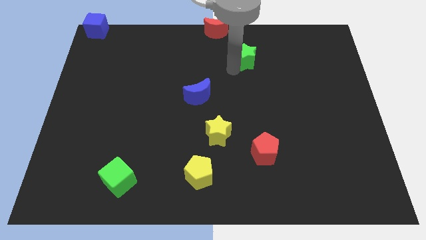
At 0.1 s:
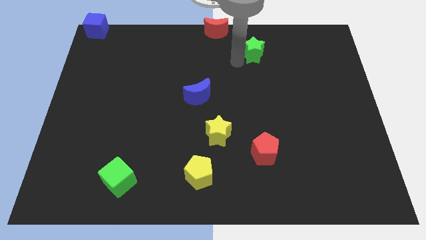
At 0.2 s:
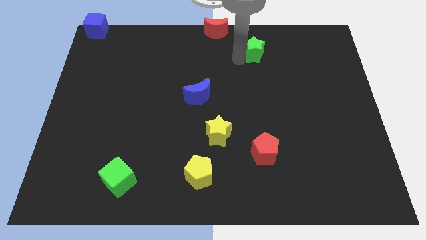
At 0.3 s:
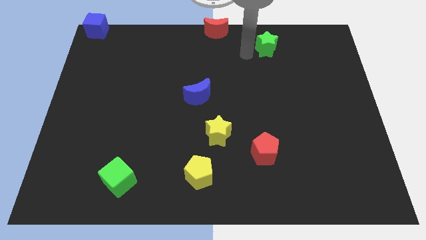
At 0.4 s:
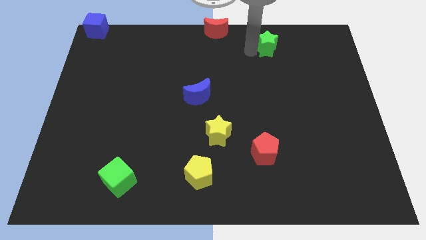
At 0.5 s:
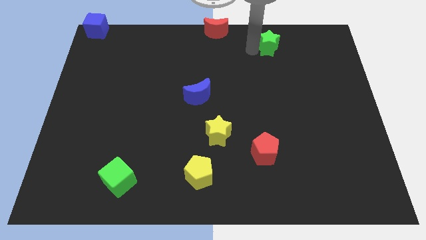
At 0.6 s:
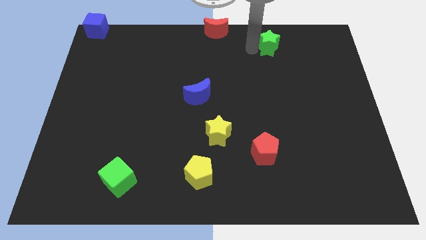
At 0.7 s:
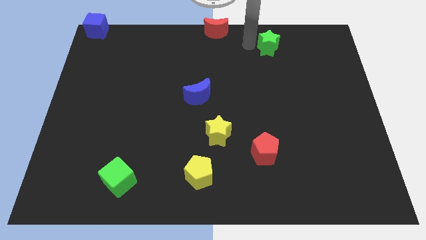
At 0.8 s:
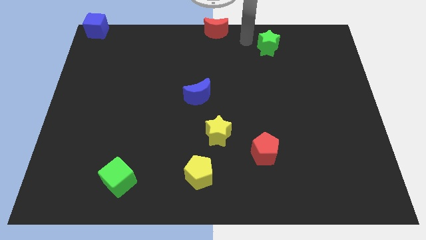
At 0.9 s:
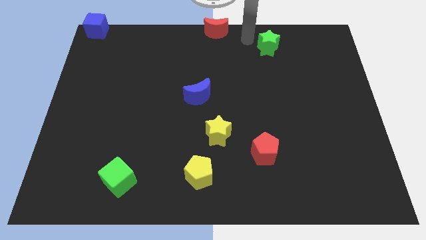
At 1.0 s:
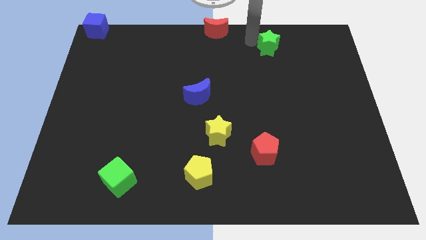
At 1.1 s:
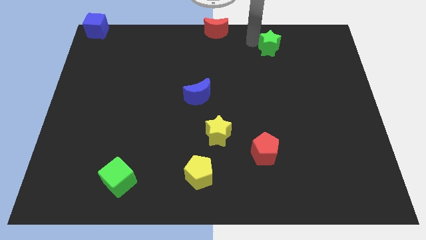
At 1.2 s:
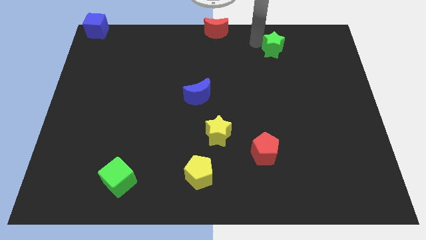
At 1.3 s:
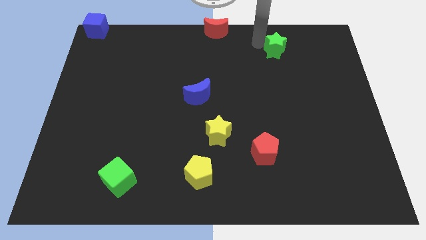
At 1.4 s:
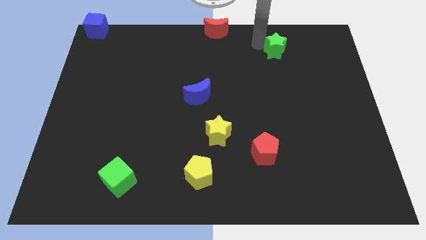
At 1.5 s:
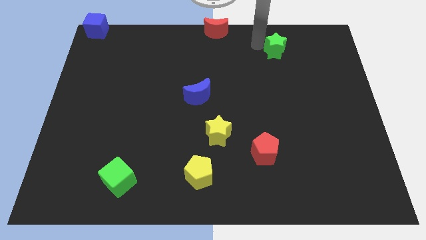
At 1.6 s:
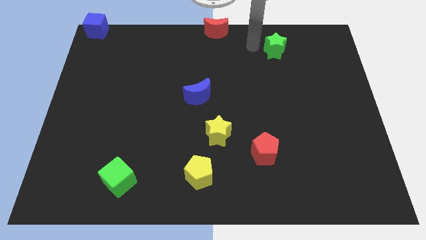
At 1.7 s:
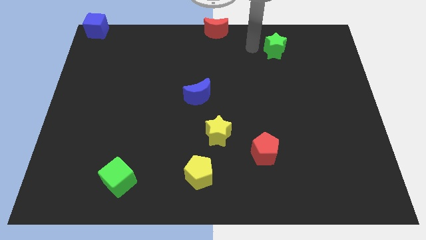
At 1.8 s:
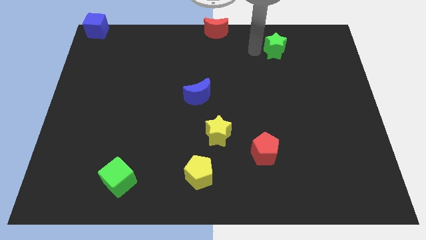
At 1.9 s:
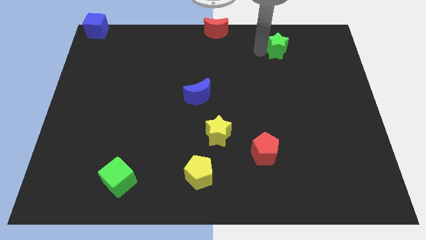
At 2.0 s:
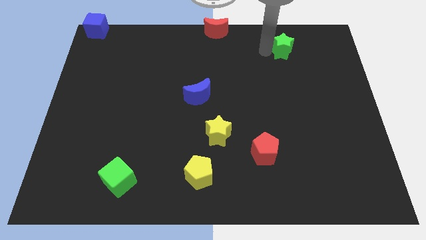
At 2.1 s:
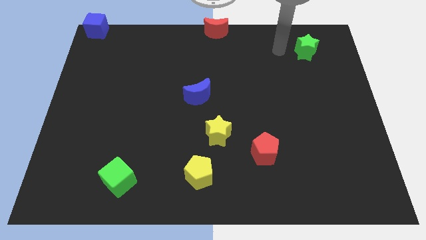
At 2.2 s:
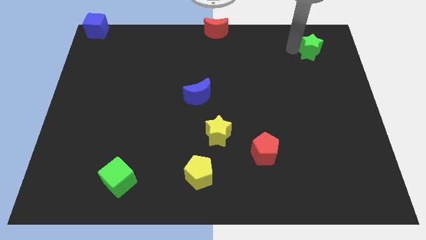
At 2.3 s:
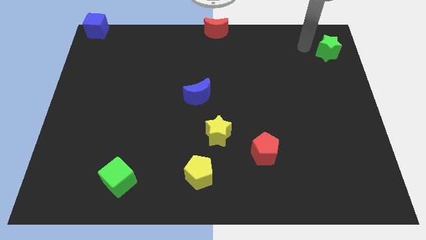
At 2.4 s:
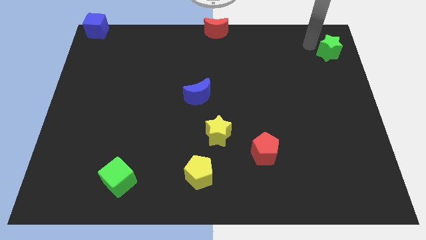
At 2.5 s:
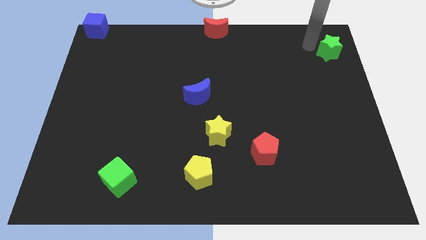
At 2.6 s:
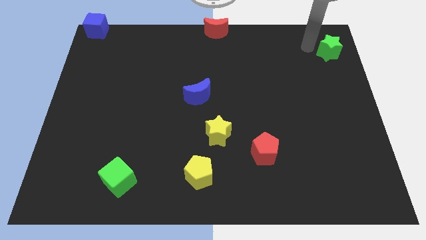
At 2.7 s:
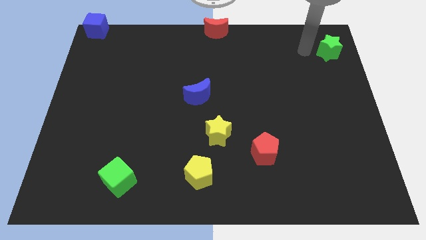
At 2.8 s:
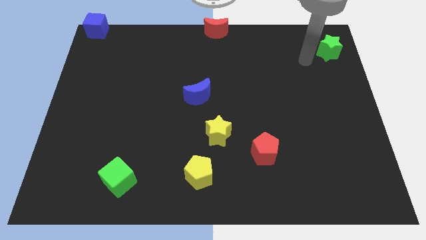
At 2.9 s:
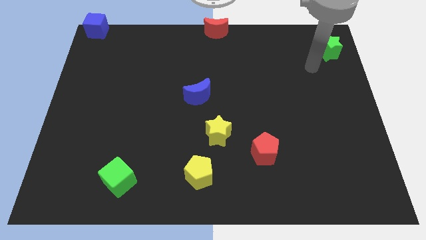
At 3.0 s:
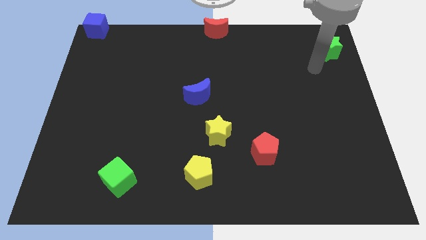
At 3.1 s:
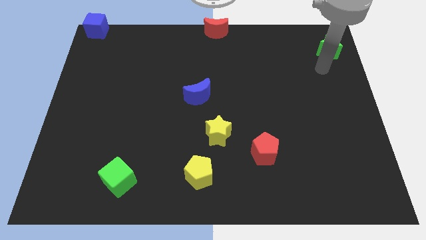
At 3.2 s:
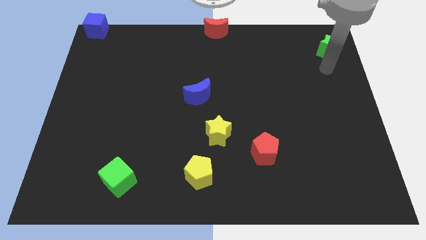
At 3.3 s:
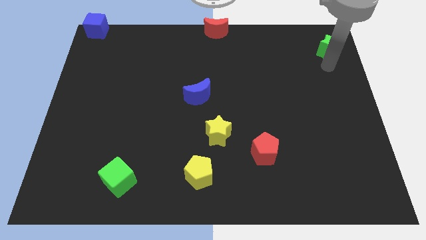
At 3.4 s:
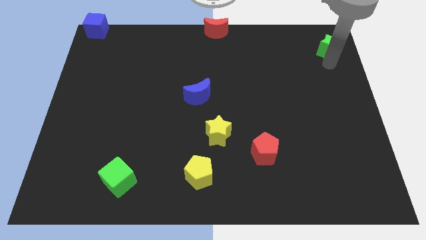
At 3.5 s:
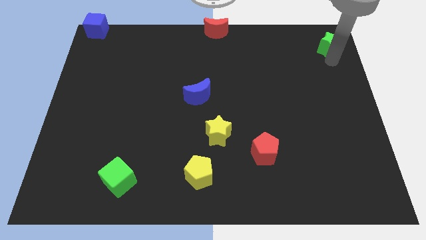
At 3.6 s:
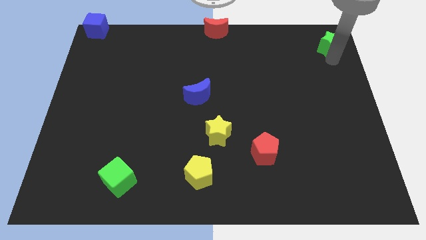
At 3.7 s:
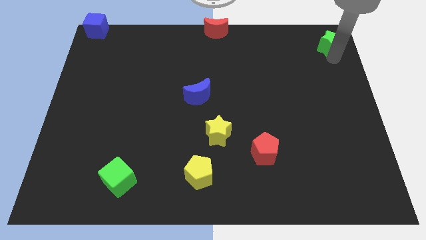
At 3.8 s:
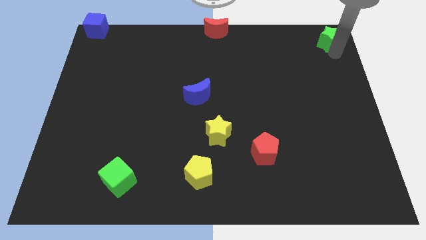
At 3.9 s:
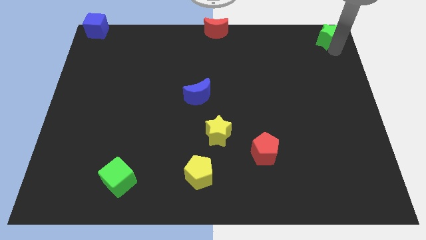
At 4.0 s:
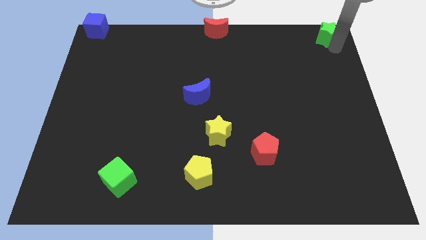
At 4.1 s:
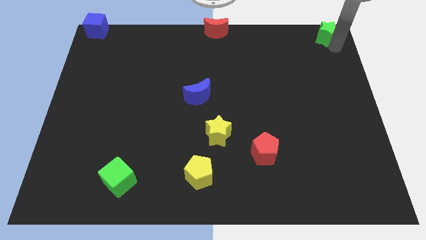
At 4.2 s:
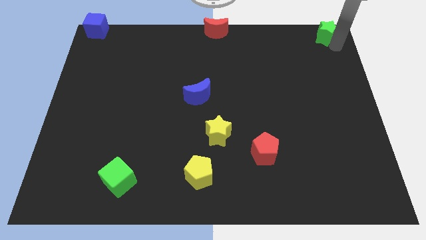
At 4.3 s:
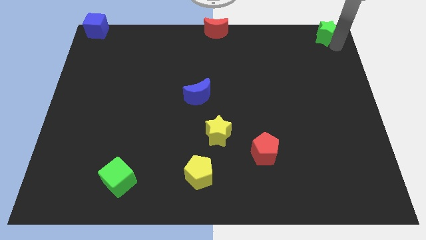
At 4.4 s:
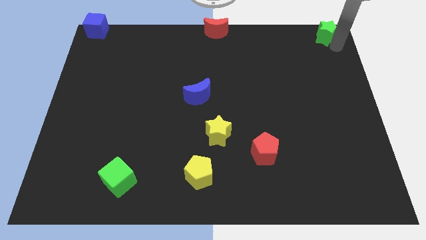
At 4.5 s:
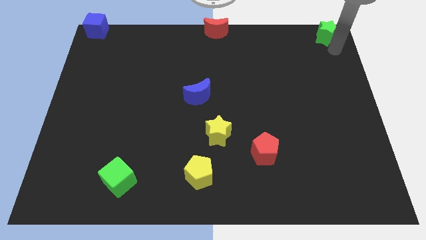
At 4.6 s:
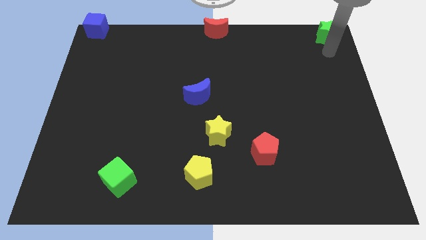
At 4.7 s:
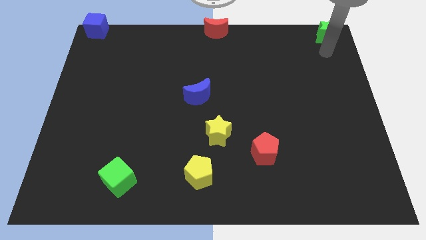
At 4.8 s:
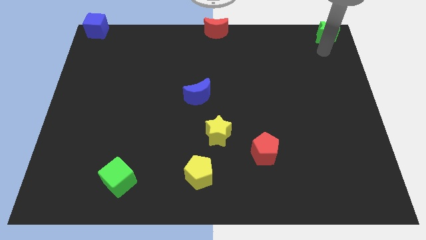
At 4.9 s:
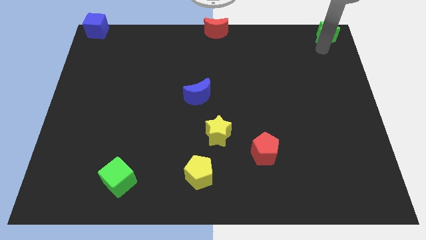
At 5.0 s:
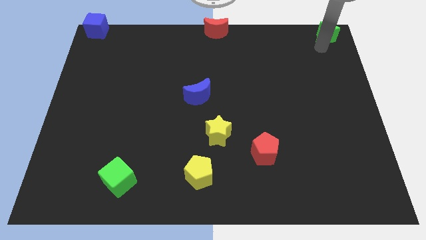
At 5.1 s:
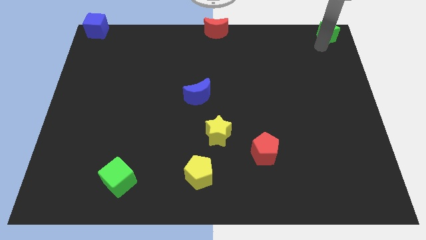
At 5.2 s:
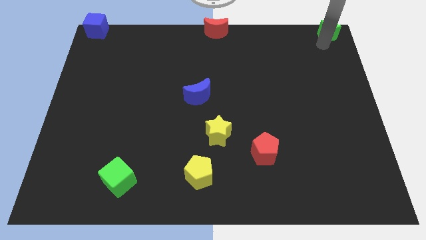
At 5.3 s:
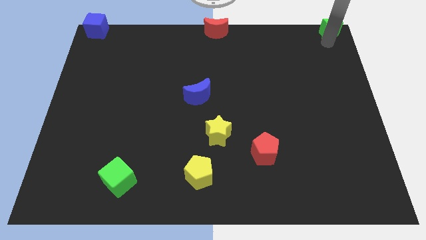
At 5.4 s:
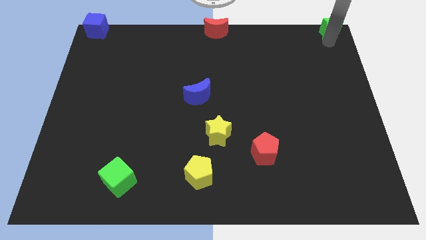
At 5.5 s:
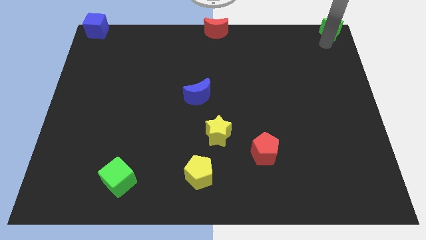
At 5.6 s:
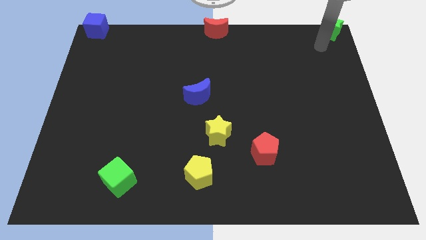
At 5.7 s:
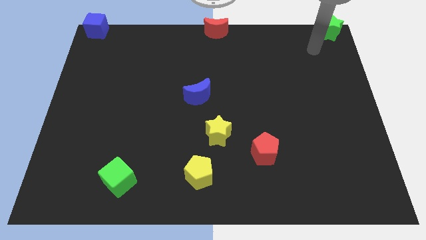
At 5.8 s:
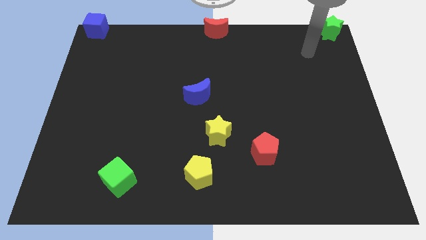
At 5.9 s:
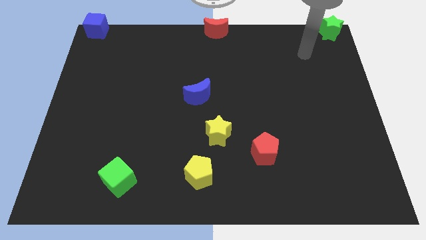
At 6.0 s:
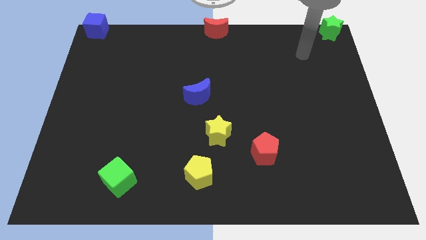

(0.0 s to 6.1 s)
place the green star to the top right corner of the board

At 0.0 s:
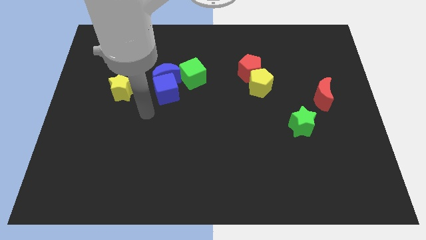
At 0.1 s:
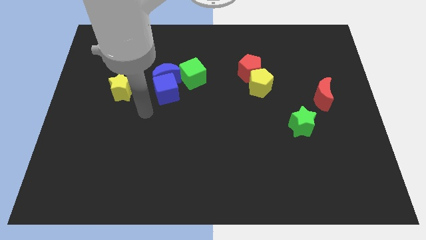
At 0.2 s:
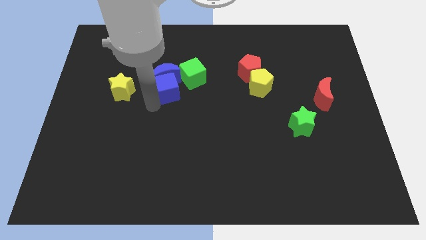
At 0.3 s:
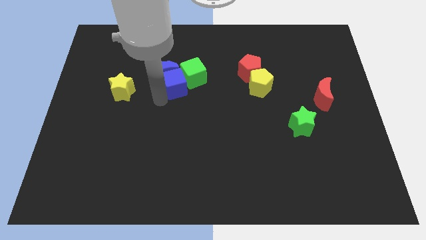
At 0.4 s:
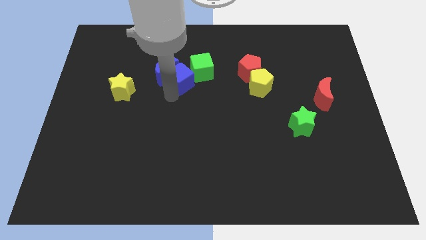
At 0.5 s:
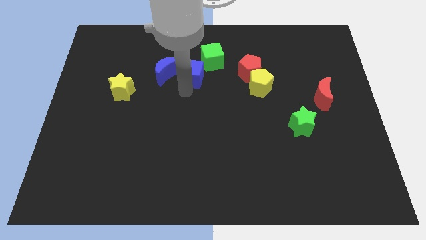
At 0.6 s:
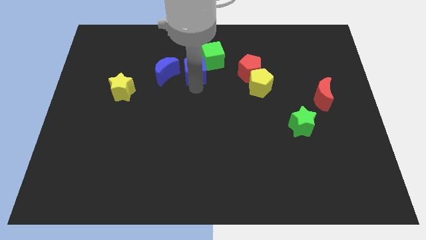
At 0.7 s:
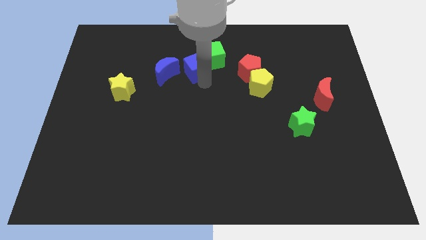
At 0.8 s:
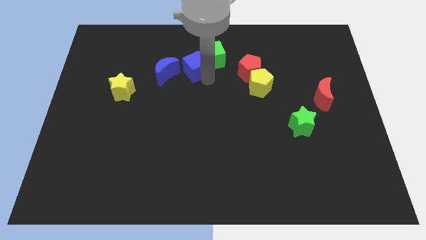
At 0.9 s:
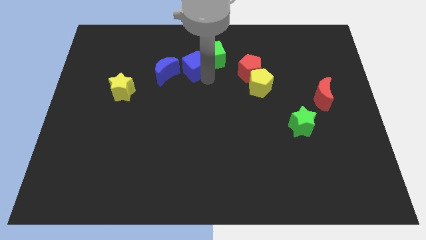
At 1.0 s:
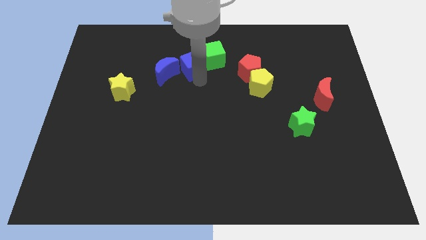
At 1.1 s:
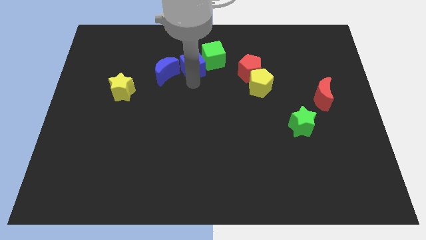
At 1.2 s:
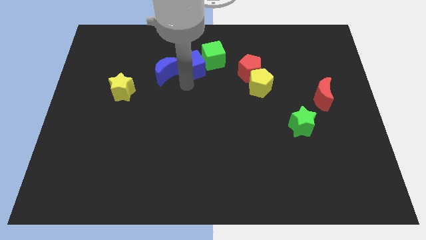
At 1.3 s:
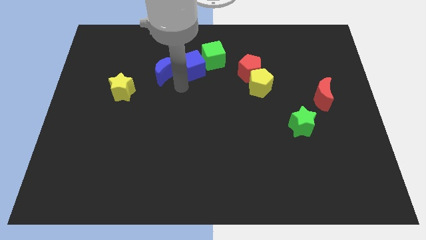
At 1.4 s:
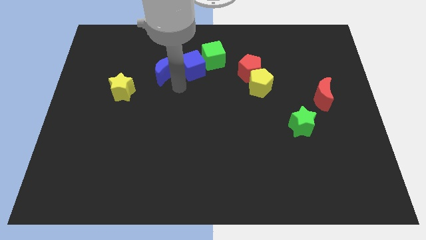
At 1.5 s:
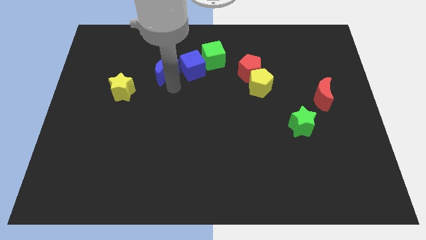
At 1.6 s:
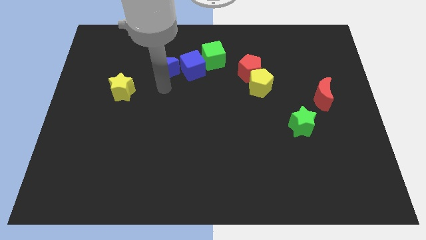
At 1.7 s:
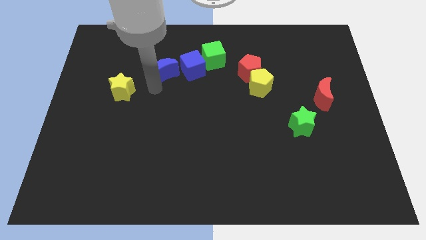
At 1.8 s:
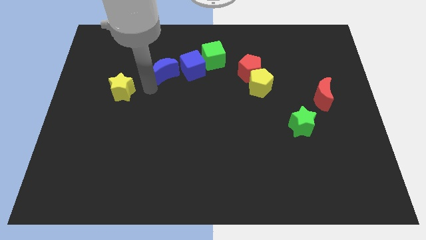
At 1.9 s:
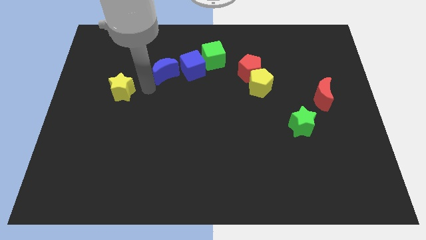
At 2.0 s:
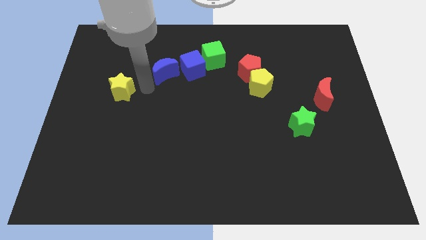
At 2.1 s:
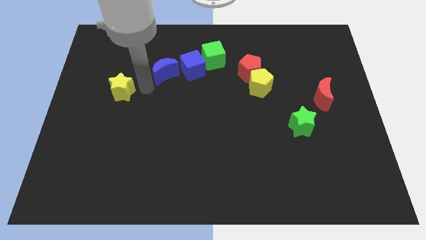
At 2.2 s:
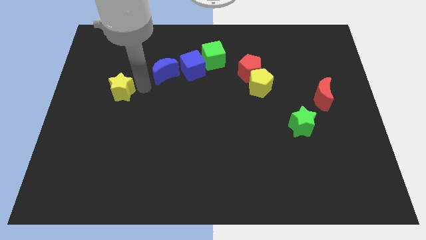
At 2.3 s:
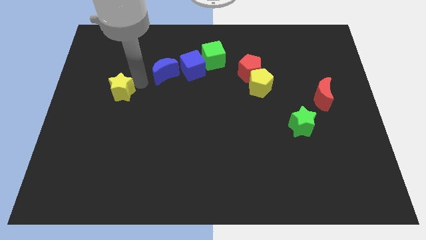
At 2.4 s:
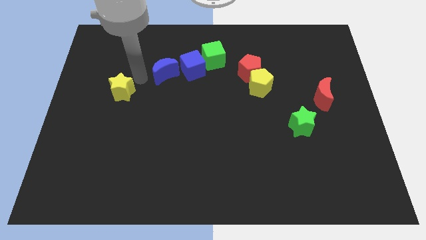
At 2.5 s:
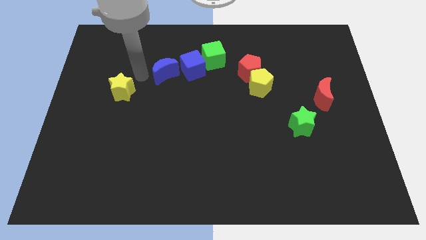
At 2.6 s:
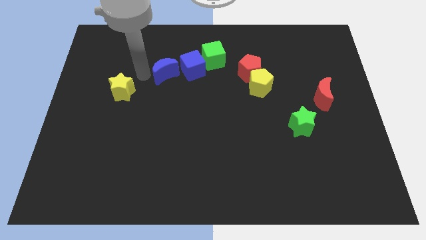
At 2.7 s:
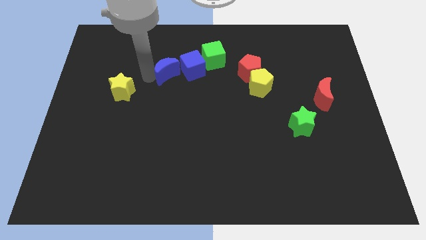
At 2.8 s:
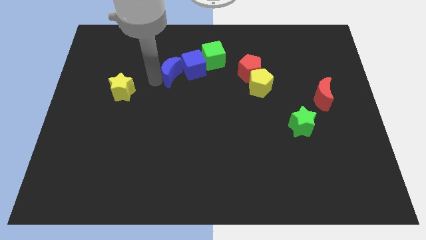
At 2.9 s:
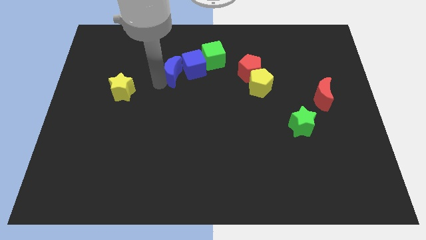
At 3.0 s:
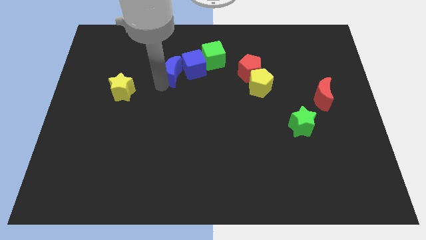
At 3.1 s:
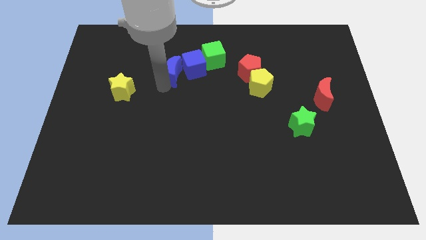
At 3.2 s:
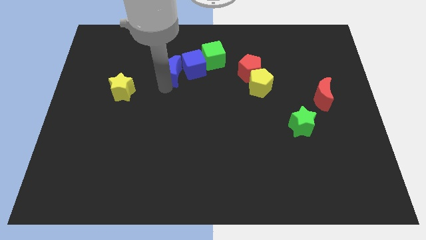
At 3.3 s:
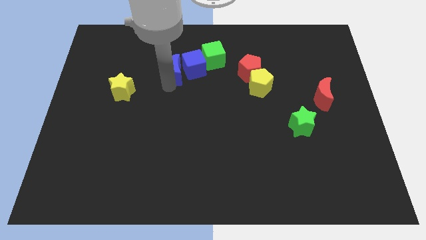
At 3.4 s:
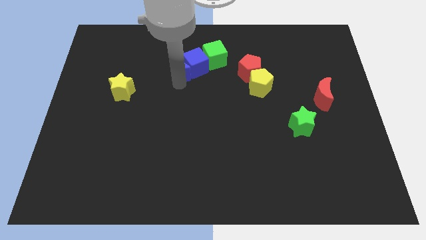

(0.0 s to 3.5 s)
put the blue cube diagonally in between the blue moon and the green cube
